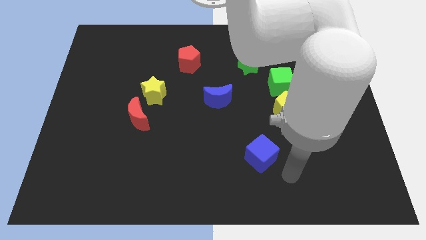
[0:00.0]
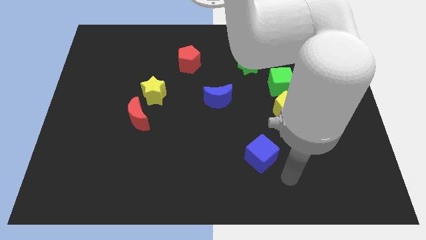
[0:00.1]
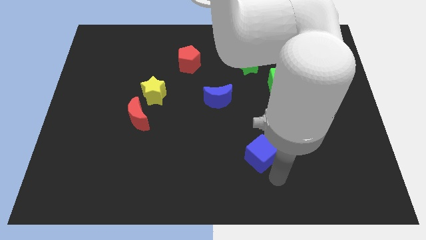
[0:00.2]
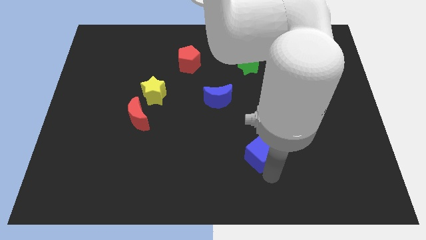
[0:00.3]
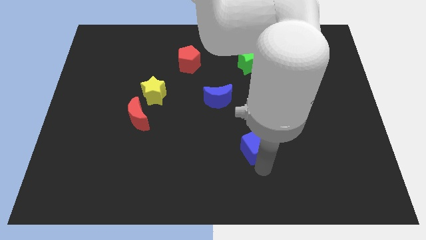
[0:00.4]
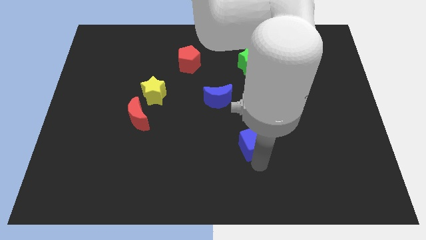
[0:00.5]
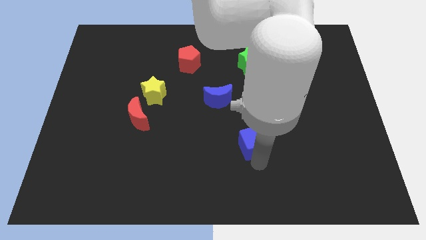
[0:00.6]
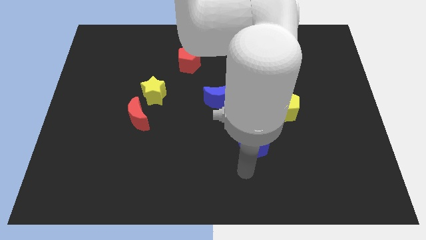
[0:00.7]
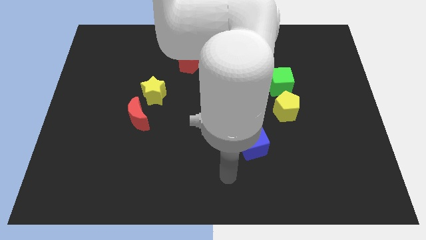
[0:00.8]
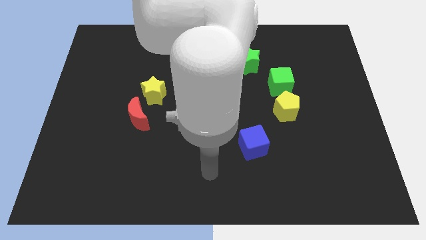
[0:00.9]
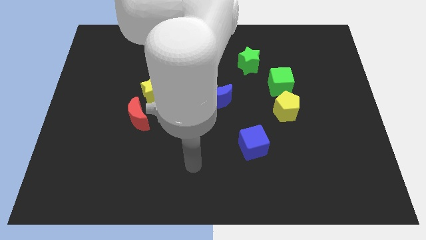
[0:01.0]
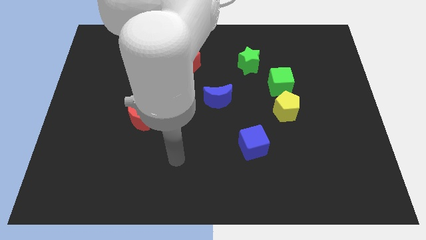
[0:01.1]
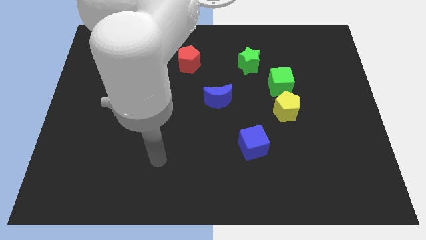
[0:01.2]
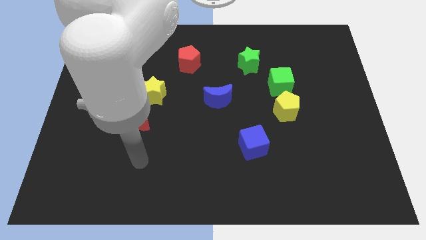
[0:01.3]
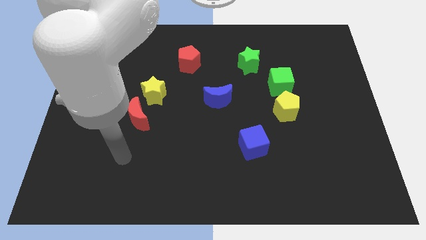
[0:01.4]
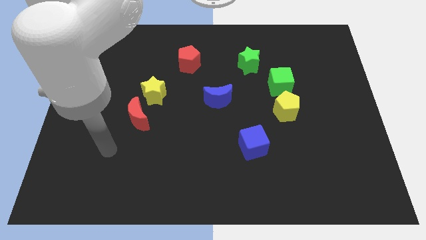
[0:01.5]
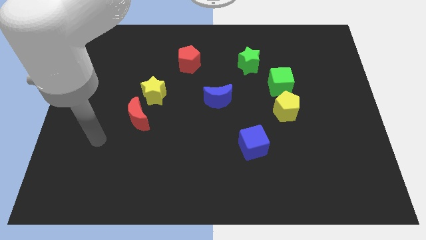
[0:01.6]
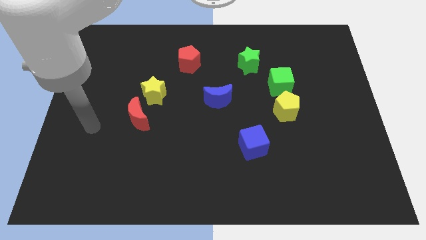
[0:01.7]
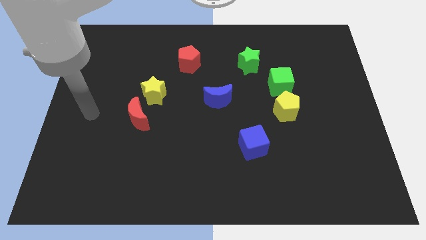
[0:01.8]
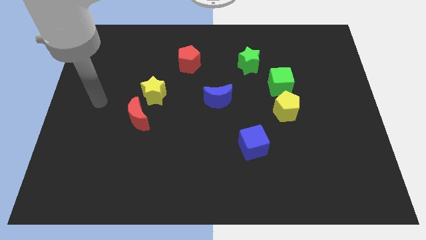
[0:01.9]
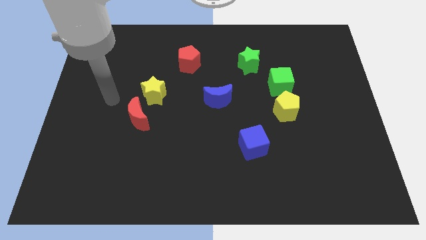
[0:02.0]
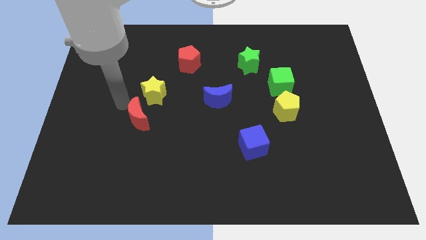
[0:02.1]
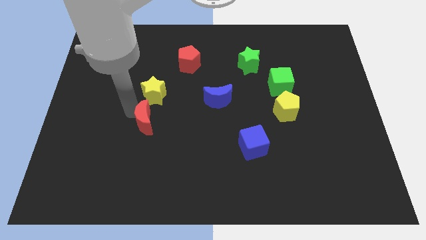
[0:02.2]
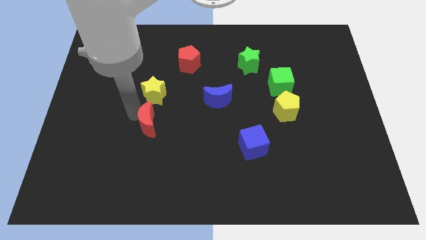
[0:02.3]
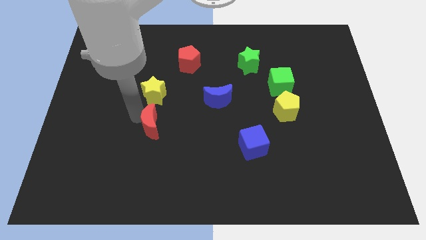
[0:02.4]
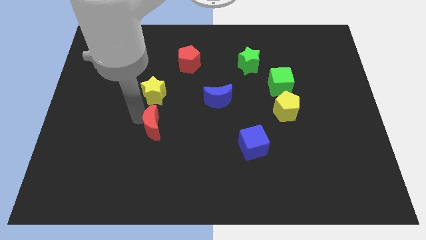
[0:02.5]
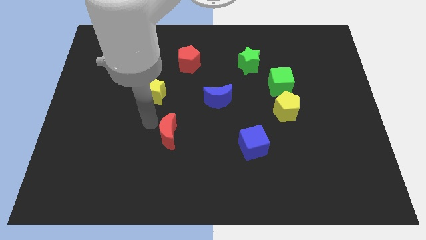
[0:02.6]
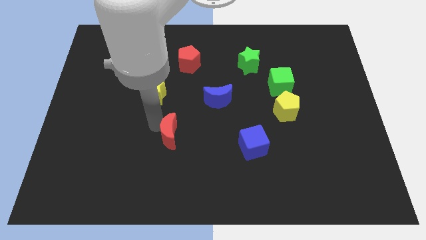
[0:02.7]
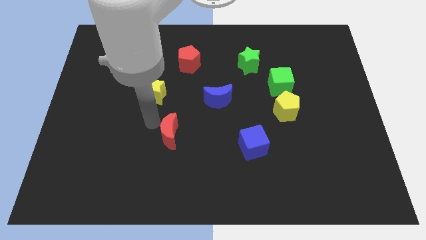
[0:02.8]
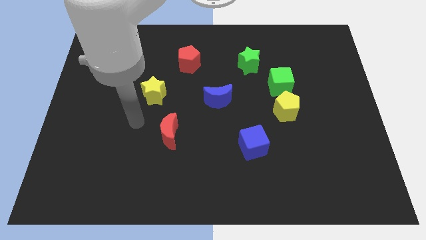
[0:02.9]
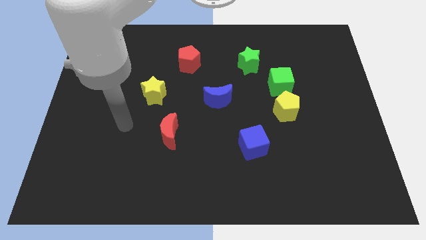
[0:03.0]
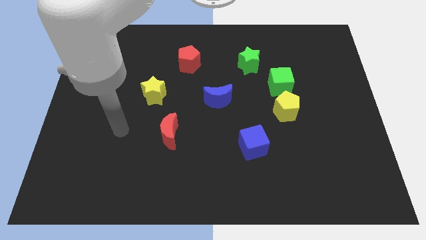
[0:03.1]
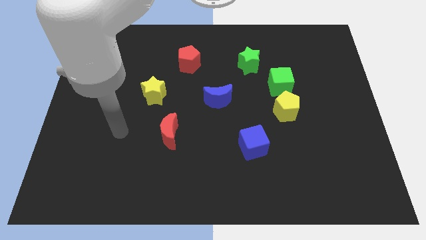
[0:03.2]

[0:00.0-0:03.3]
place the red moon slightly at the bottom right side of the yellow star

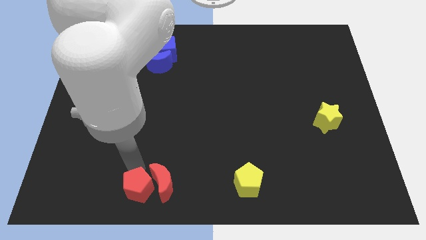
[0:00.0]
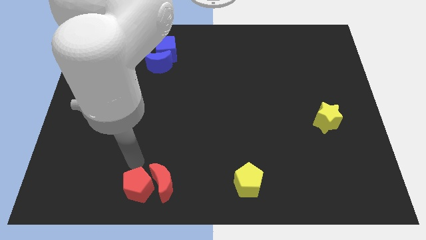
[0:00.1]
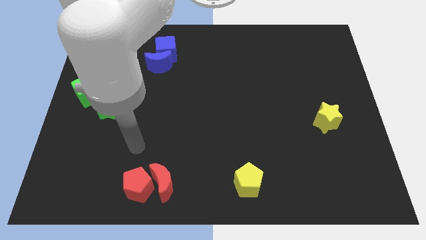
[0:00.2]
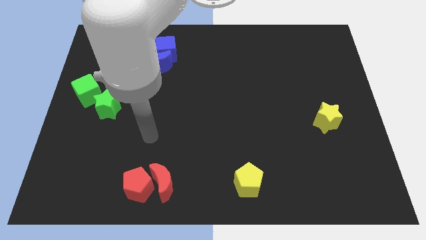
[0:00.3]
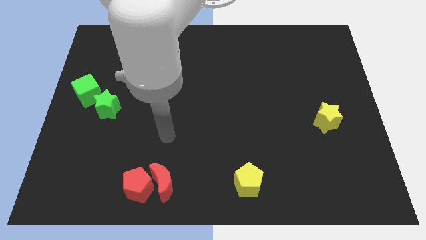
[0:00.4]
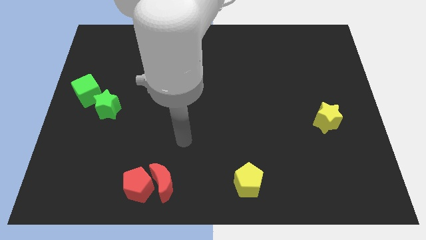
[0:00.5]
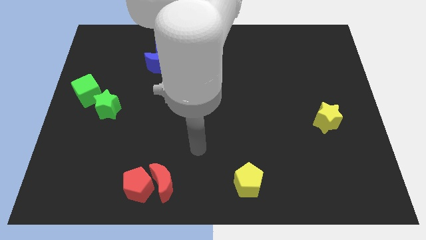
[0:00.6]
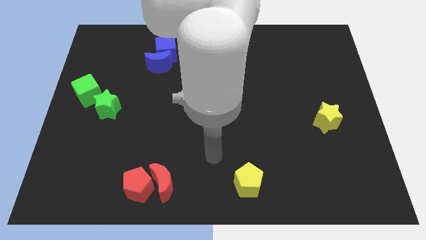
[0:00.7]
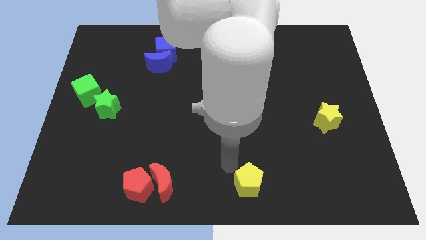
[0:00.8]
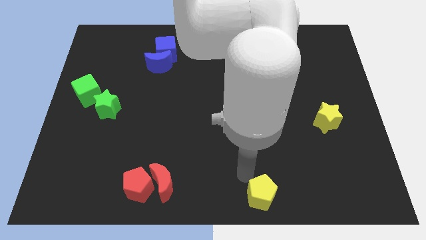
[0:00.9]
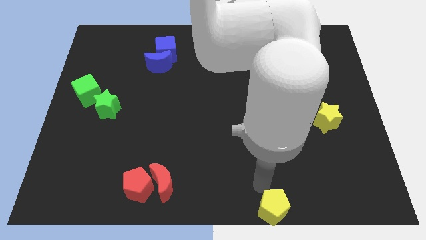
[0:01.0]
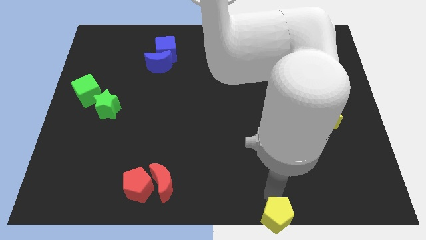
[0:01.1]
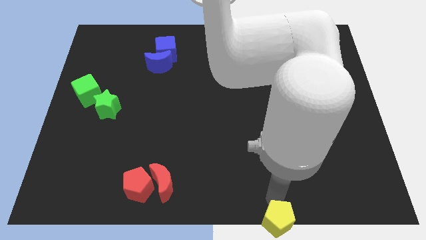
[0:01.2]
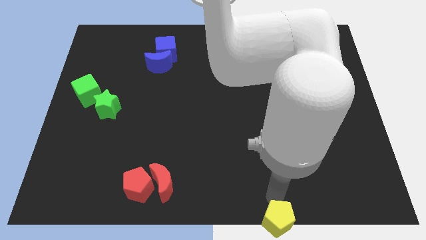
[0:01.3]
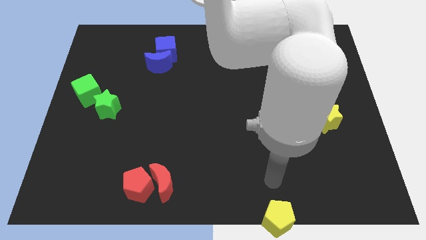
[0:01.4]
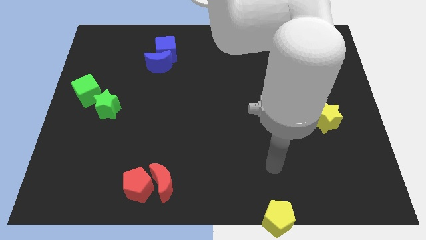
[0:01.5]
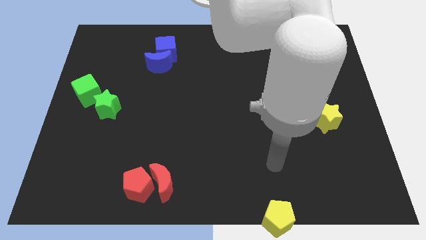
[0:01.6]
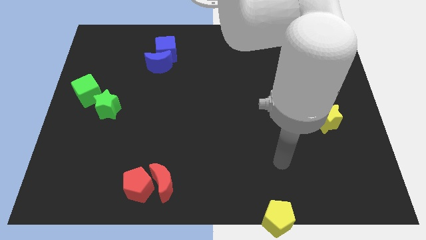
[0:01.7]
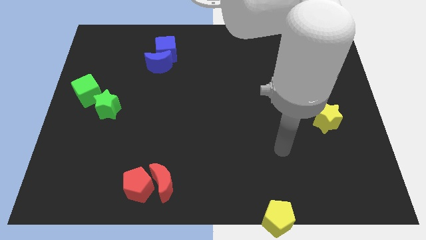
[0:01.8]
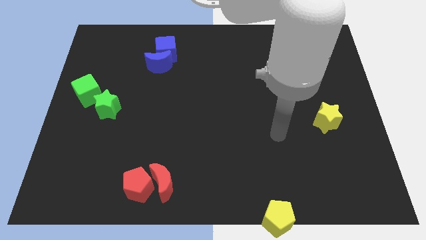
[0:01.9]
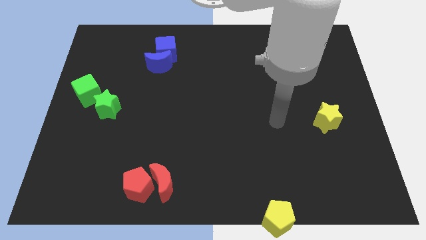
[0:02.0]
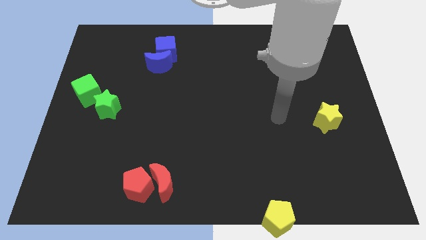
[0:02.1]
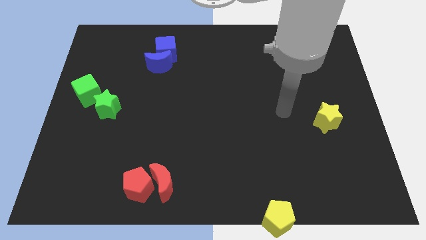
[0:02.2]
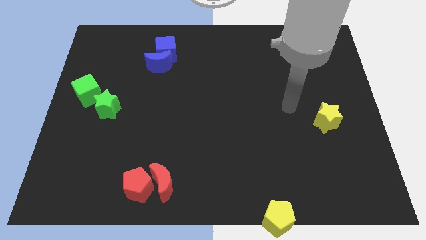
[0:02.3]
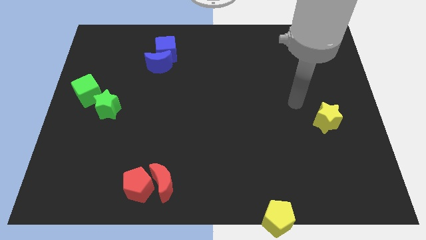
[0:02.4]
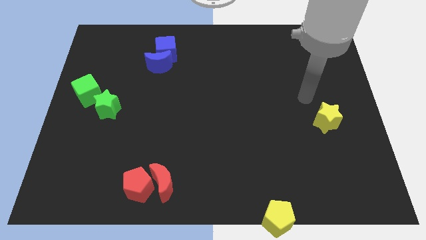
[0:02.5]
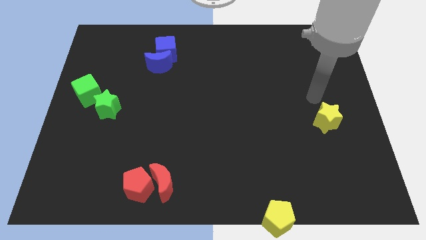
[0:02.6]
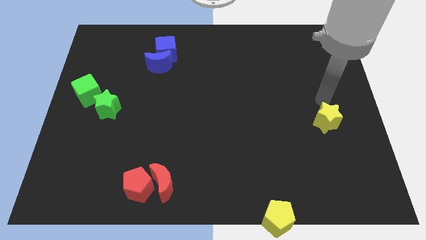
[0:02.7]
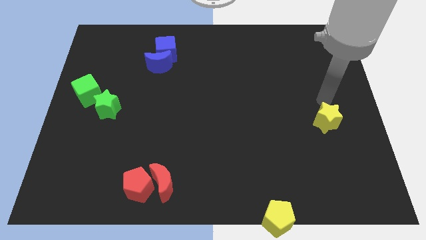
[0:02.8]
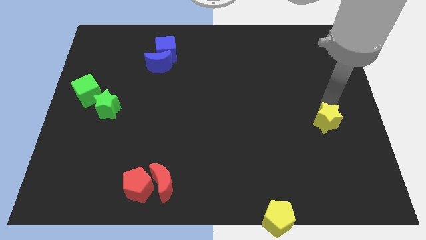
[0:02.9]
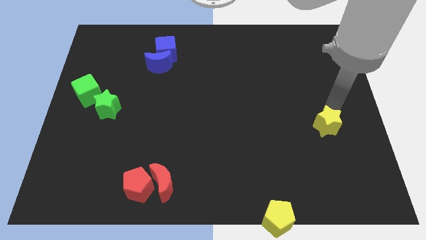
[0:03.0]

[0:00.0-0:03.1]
put the yellow pentagon into the bottom of the board

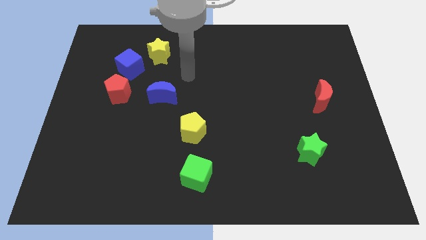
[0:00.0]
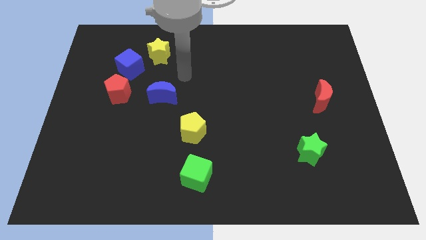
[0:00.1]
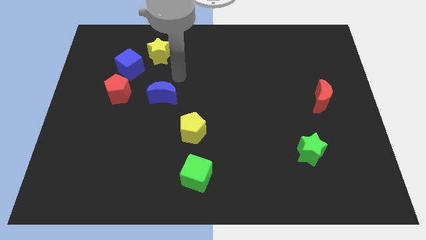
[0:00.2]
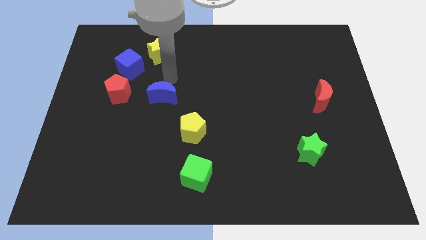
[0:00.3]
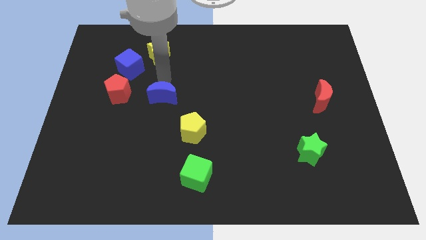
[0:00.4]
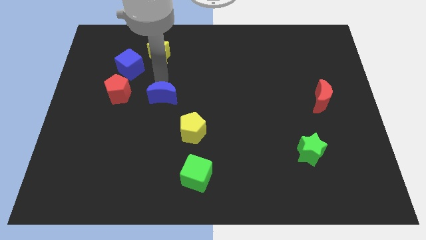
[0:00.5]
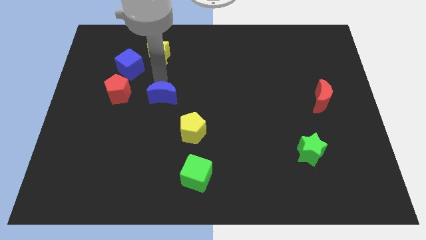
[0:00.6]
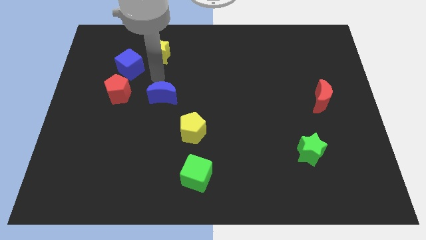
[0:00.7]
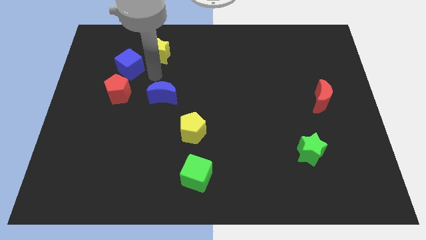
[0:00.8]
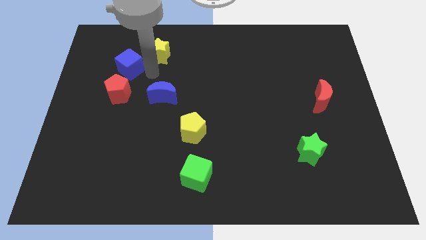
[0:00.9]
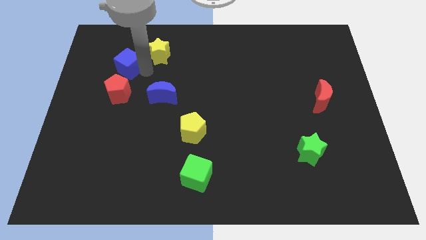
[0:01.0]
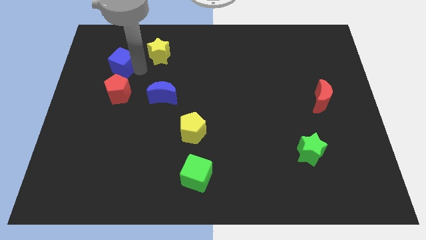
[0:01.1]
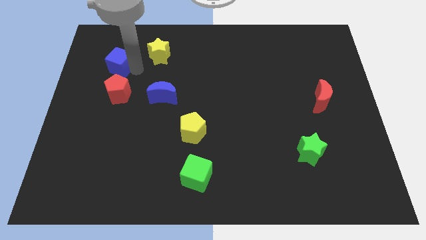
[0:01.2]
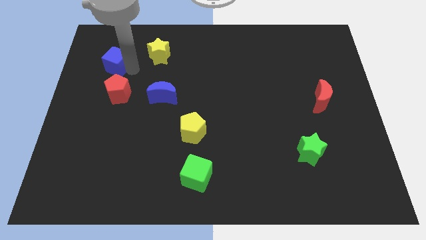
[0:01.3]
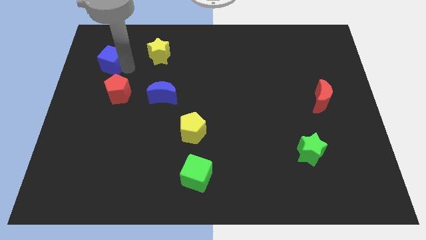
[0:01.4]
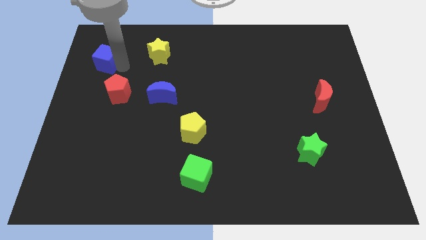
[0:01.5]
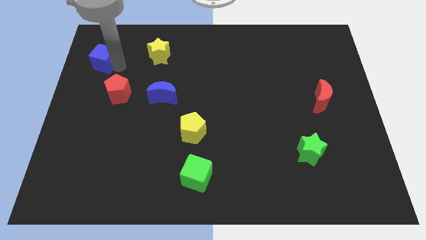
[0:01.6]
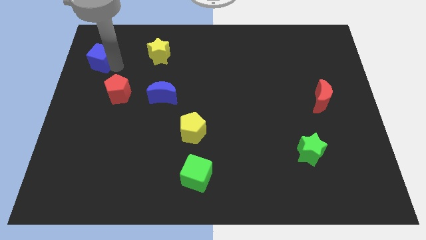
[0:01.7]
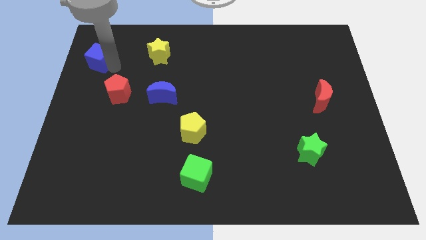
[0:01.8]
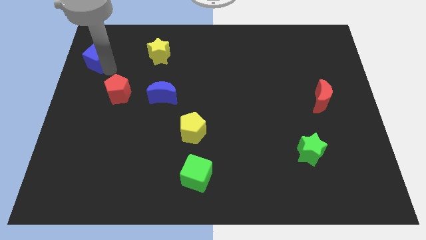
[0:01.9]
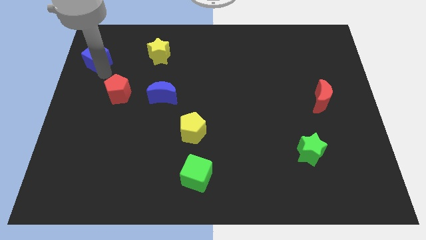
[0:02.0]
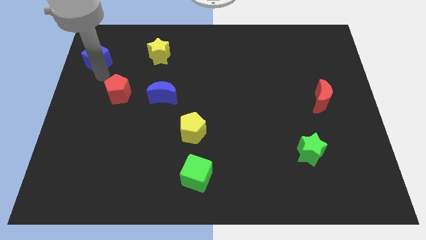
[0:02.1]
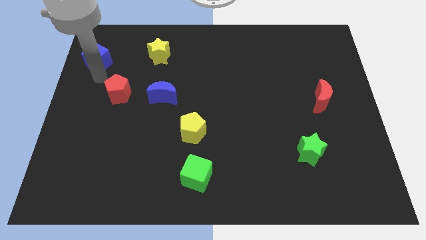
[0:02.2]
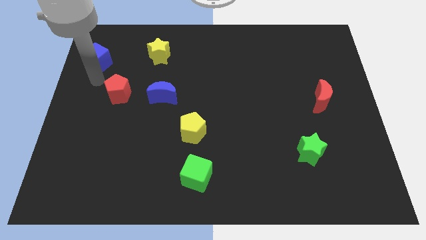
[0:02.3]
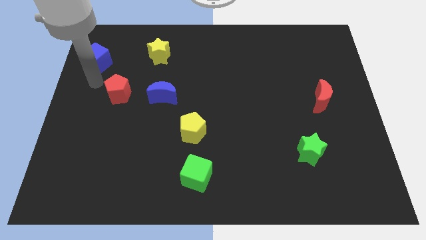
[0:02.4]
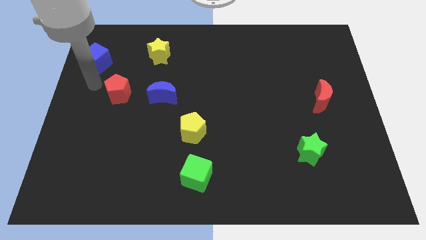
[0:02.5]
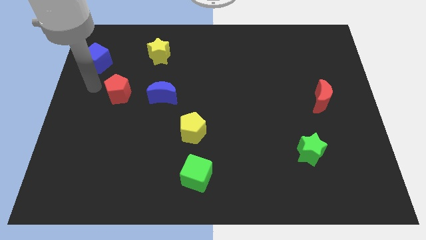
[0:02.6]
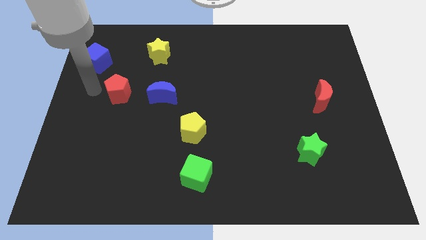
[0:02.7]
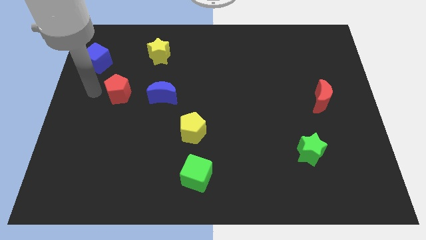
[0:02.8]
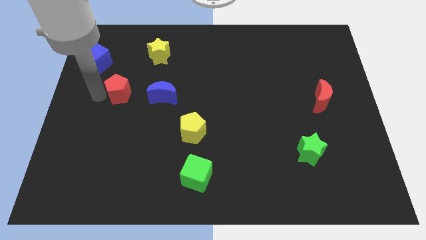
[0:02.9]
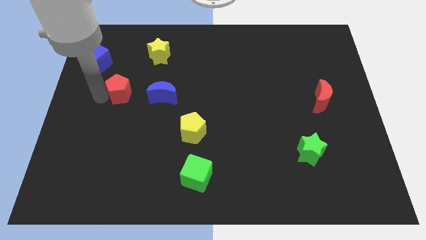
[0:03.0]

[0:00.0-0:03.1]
push the blue cube towards left
